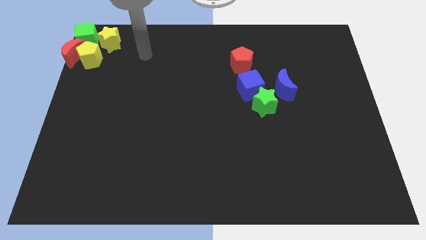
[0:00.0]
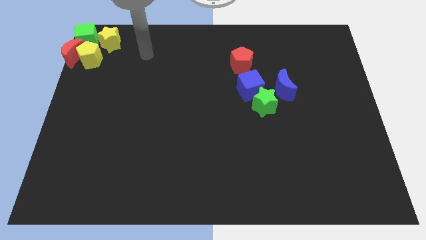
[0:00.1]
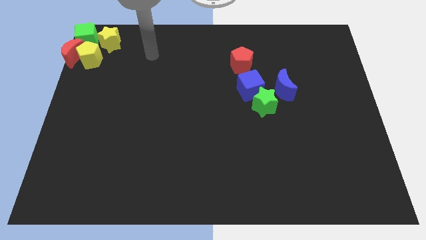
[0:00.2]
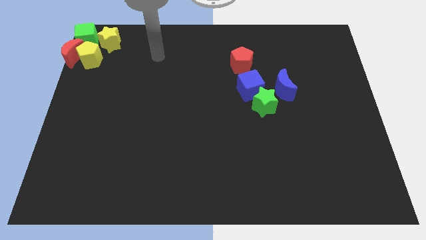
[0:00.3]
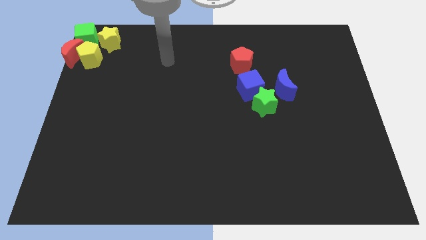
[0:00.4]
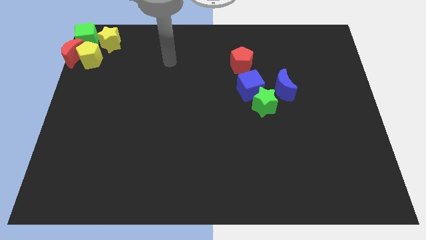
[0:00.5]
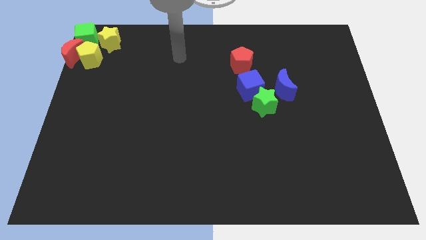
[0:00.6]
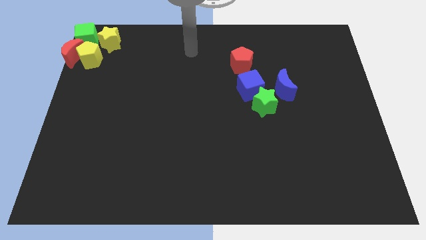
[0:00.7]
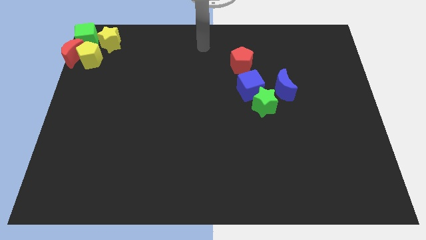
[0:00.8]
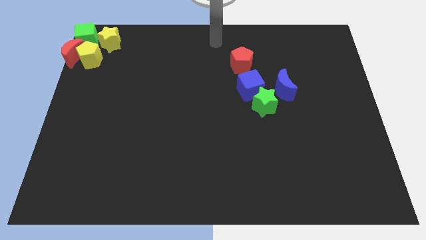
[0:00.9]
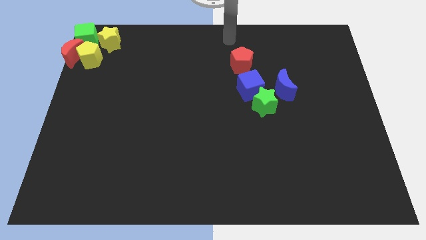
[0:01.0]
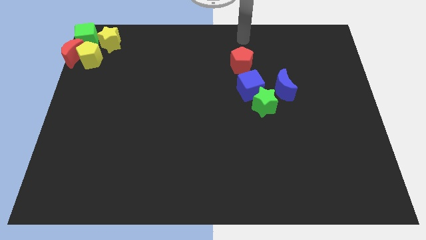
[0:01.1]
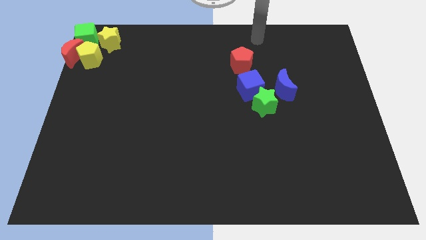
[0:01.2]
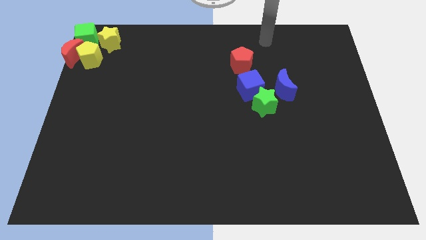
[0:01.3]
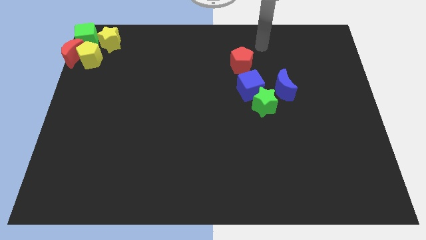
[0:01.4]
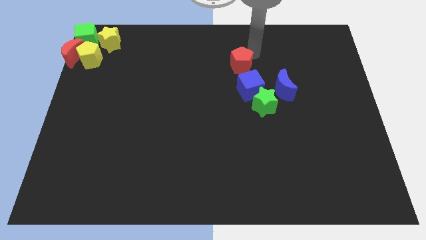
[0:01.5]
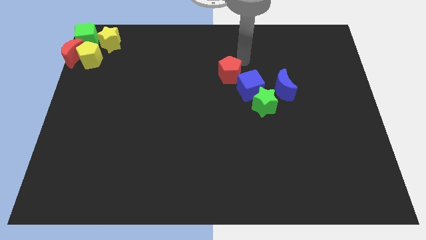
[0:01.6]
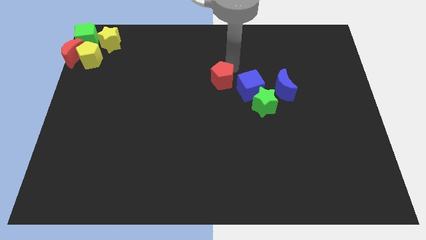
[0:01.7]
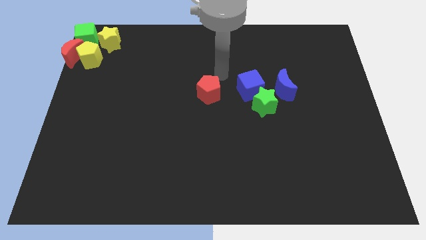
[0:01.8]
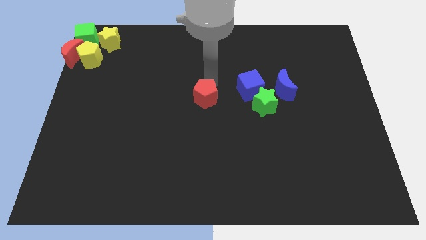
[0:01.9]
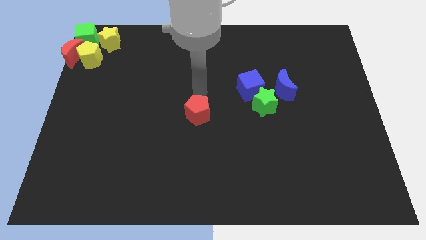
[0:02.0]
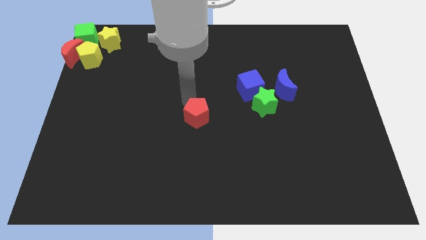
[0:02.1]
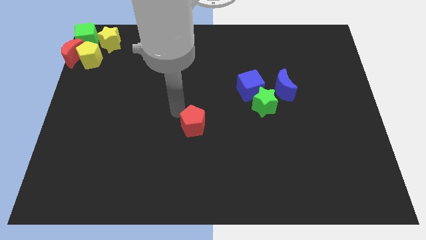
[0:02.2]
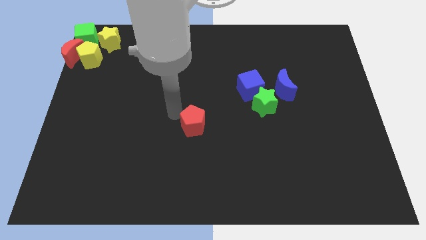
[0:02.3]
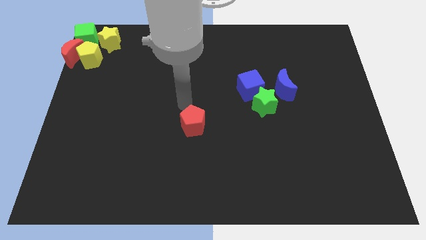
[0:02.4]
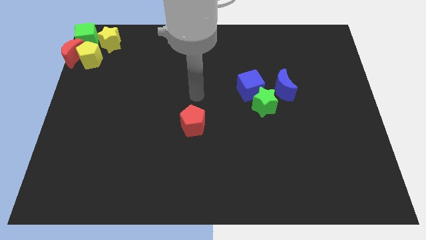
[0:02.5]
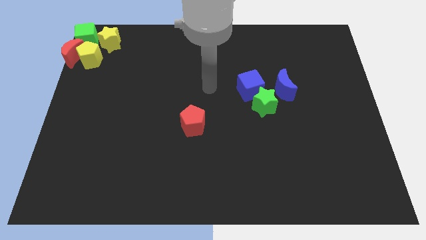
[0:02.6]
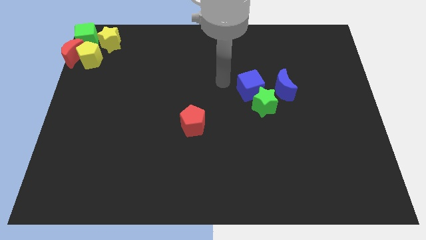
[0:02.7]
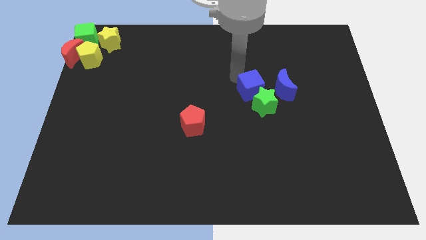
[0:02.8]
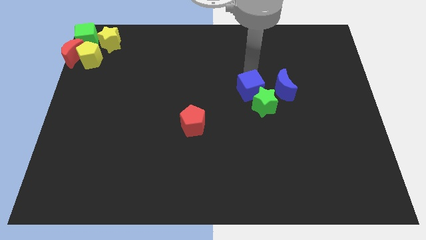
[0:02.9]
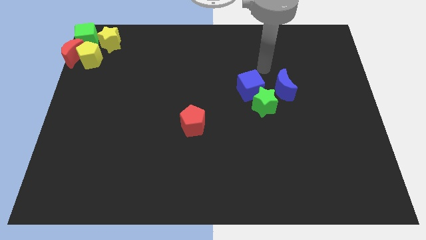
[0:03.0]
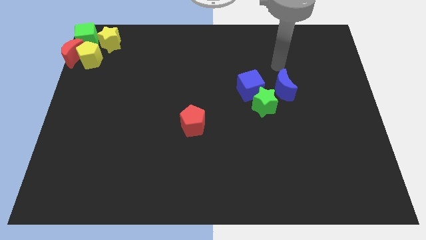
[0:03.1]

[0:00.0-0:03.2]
move the red pentagon away from the blue cube

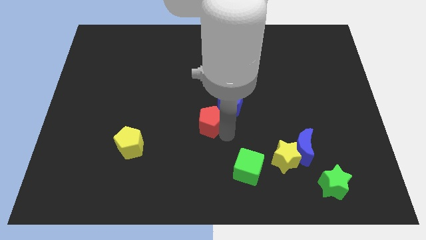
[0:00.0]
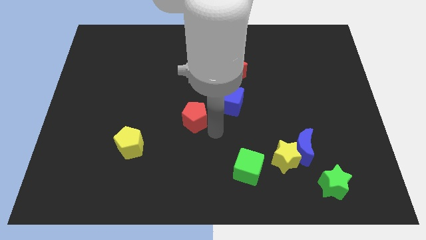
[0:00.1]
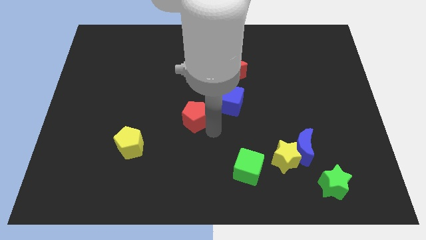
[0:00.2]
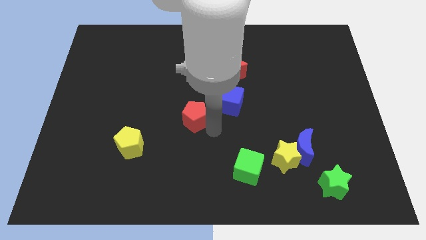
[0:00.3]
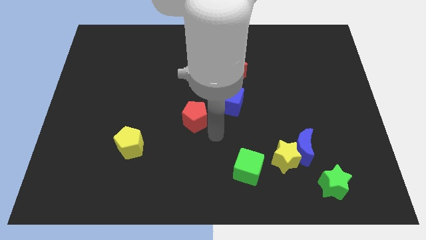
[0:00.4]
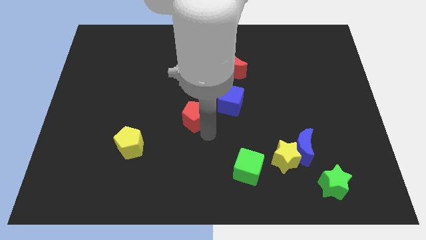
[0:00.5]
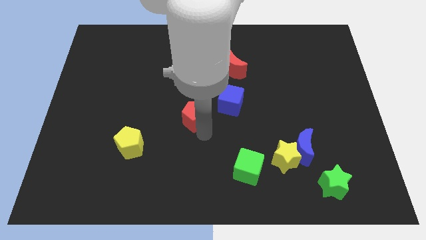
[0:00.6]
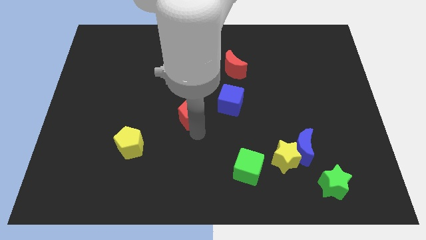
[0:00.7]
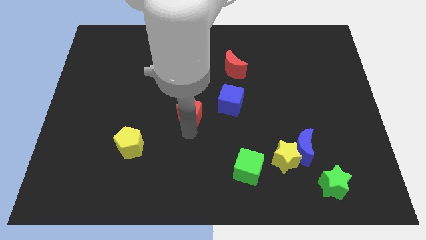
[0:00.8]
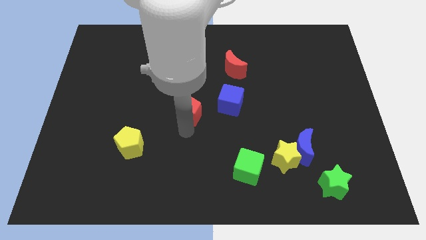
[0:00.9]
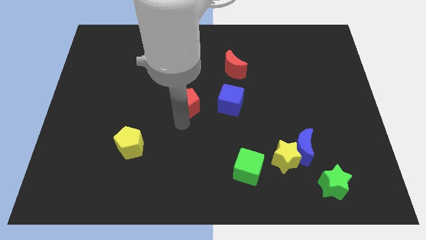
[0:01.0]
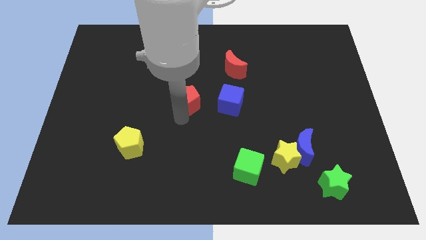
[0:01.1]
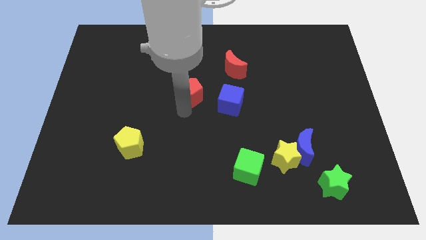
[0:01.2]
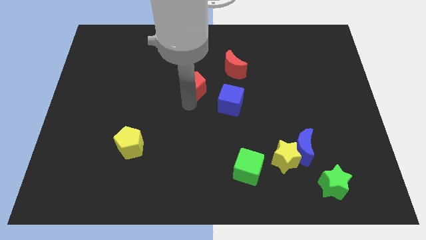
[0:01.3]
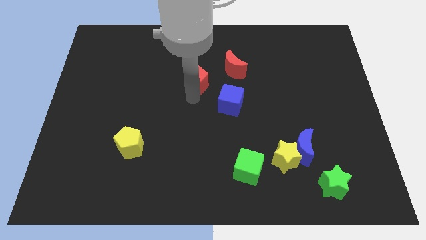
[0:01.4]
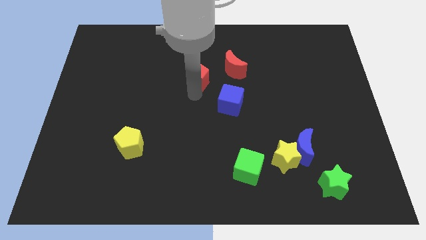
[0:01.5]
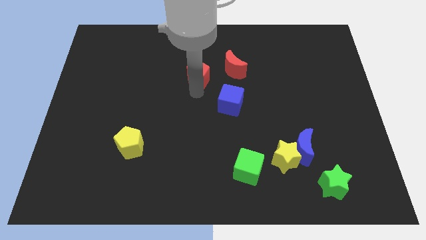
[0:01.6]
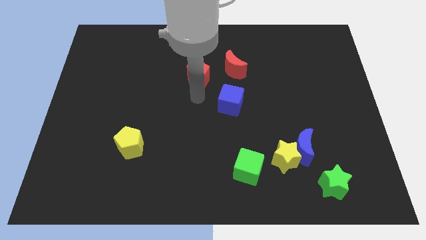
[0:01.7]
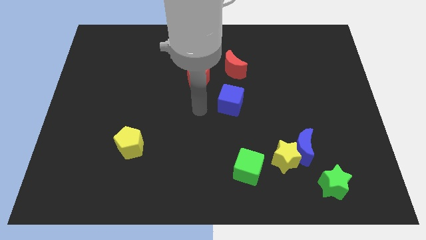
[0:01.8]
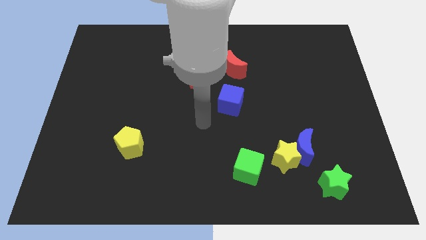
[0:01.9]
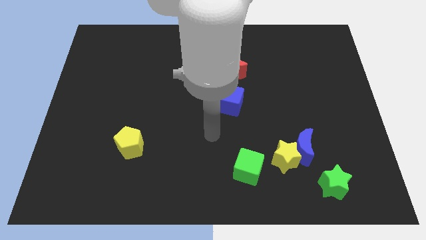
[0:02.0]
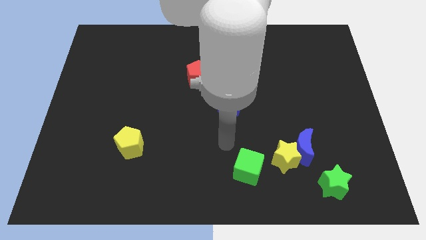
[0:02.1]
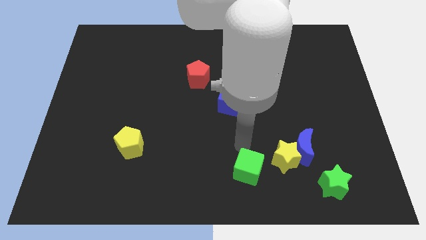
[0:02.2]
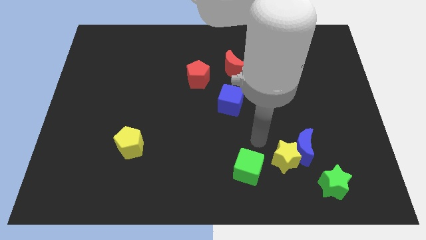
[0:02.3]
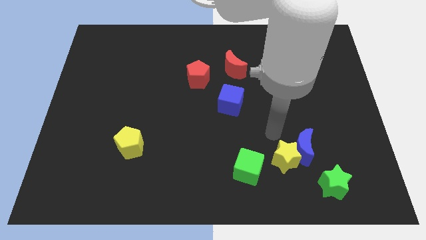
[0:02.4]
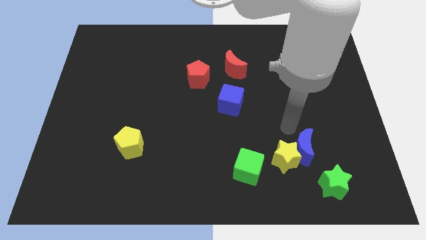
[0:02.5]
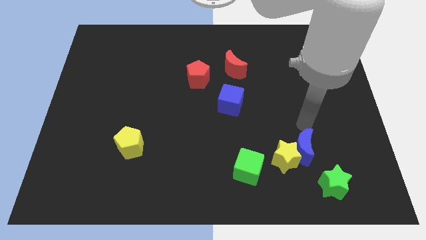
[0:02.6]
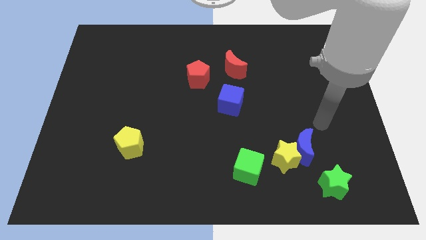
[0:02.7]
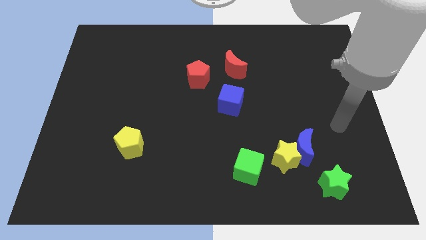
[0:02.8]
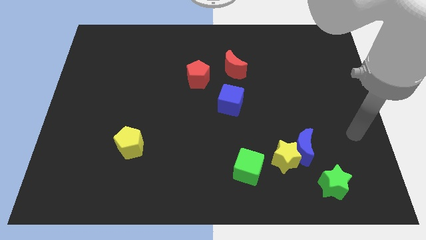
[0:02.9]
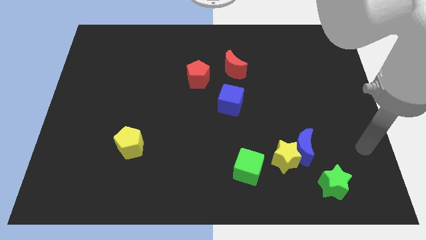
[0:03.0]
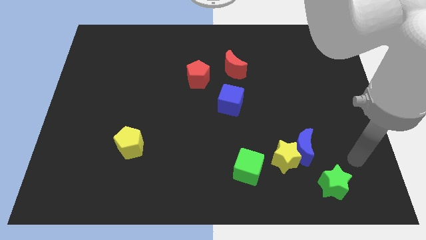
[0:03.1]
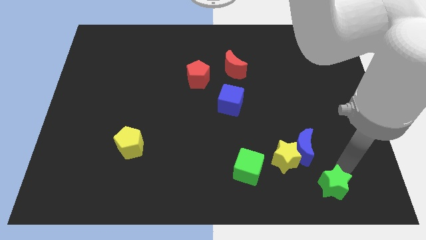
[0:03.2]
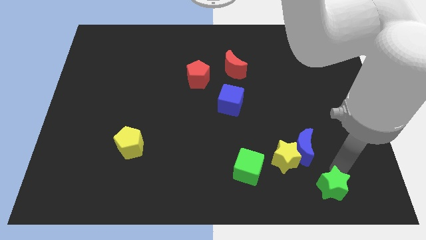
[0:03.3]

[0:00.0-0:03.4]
place the red pentagon towards the left side of the red crescent

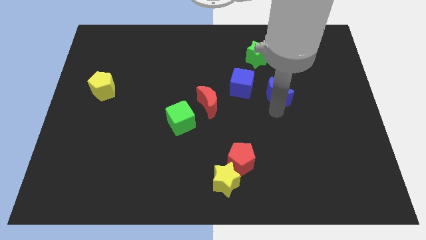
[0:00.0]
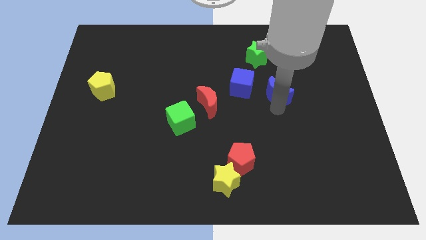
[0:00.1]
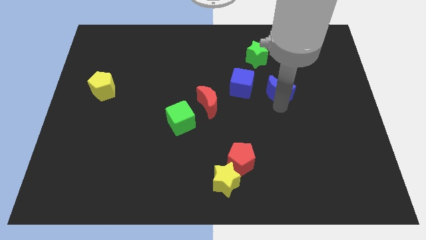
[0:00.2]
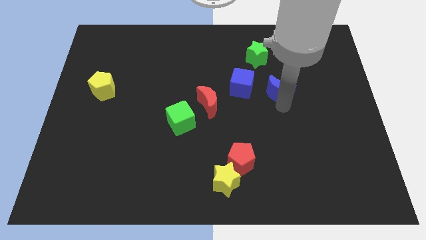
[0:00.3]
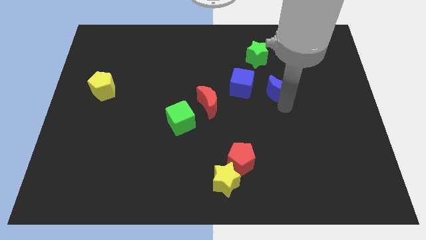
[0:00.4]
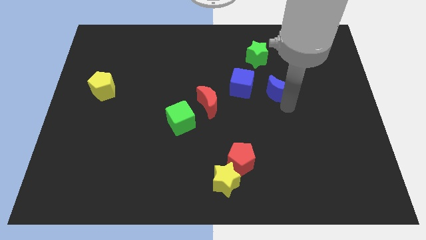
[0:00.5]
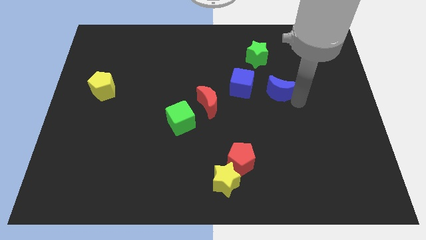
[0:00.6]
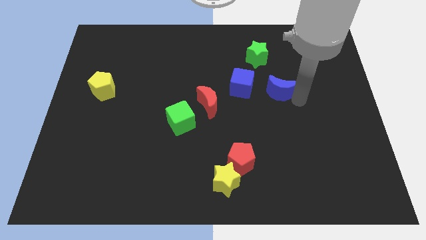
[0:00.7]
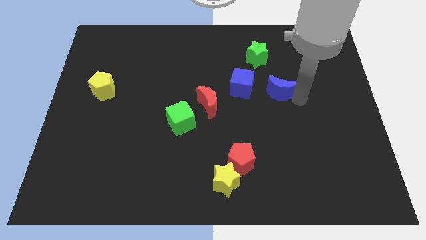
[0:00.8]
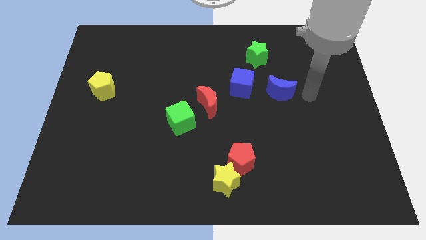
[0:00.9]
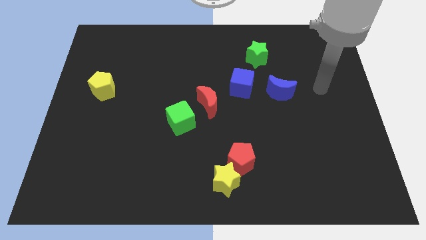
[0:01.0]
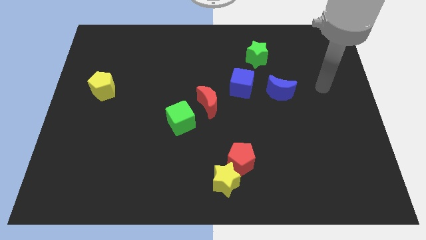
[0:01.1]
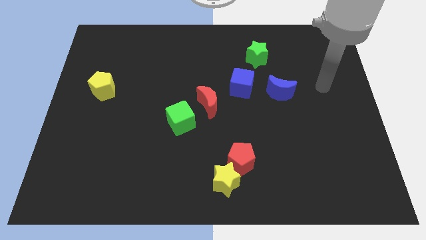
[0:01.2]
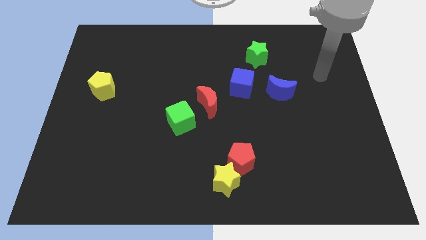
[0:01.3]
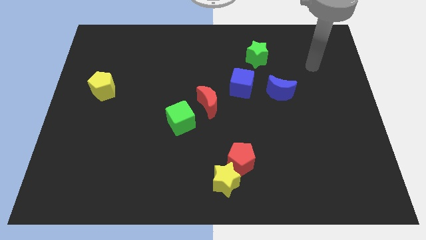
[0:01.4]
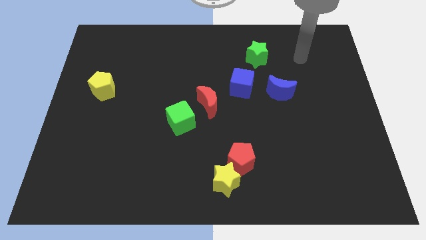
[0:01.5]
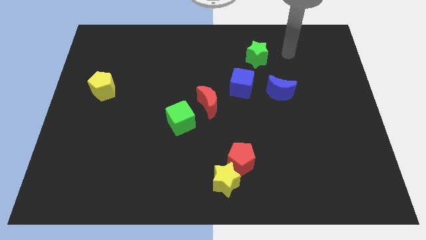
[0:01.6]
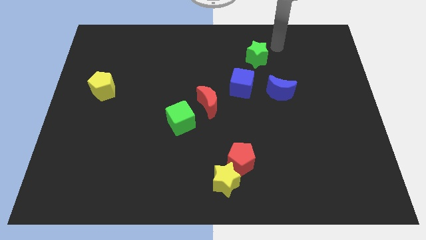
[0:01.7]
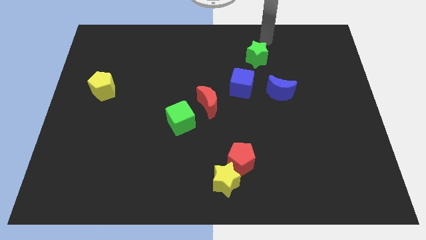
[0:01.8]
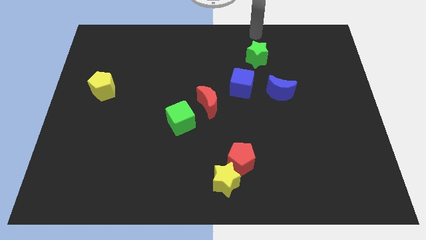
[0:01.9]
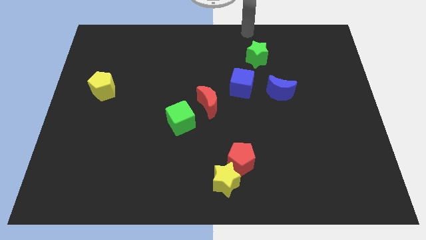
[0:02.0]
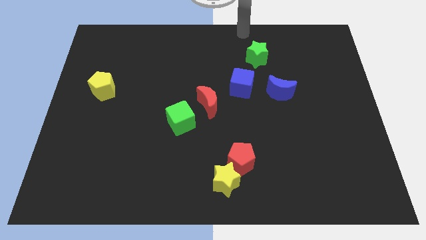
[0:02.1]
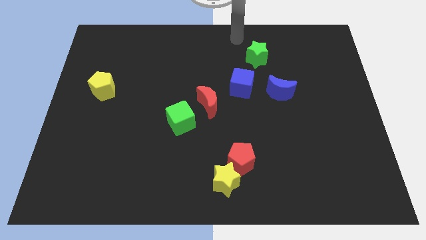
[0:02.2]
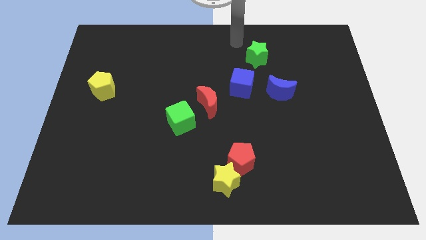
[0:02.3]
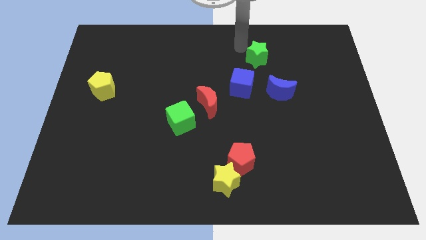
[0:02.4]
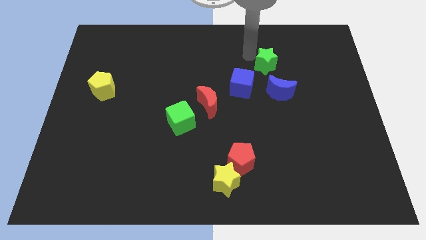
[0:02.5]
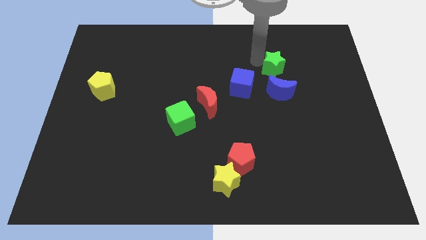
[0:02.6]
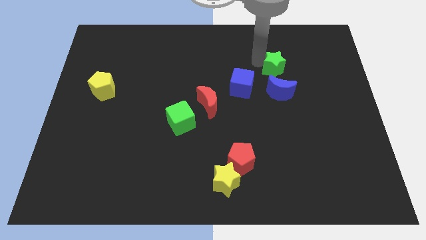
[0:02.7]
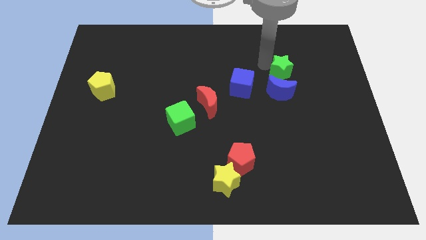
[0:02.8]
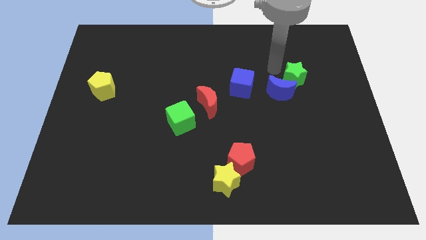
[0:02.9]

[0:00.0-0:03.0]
move the green star above to the blue moon
